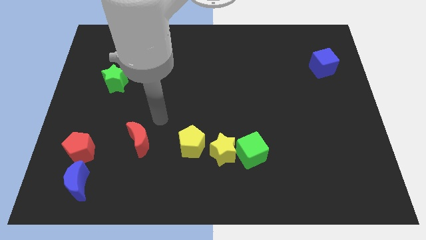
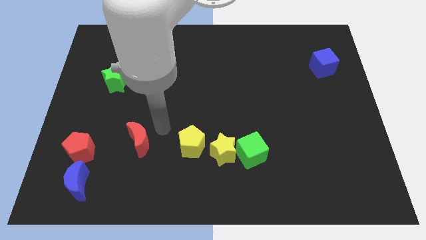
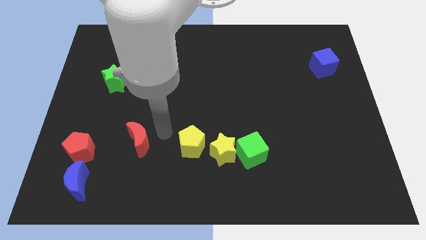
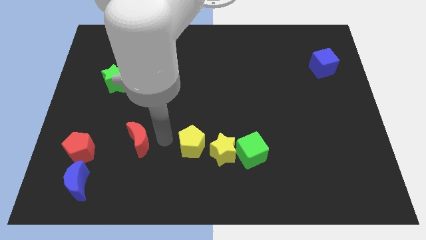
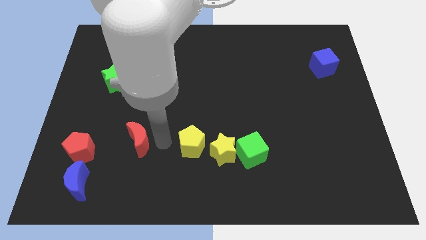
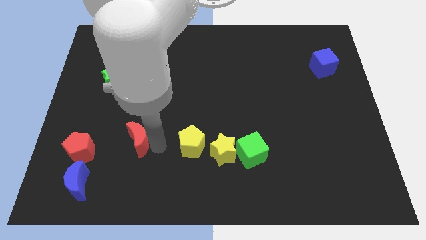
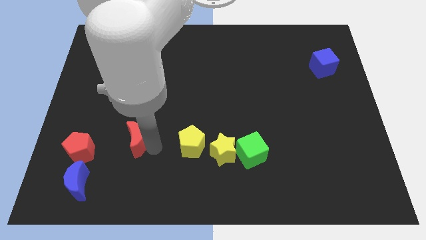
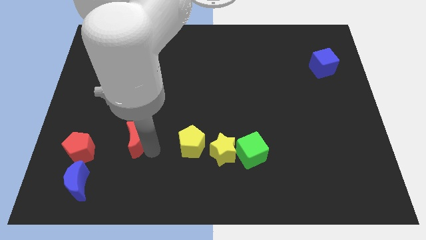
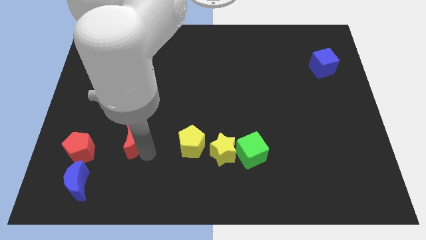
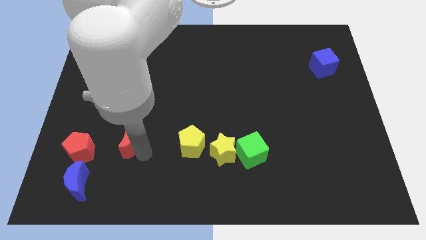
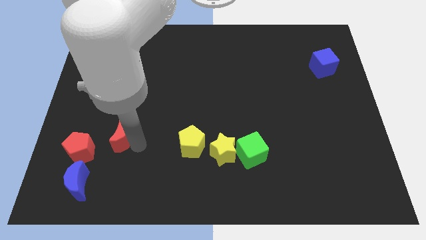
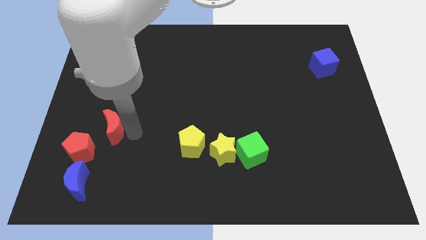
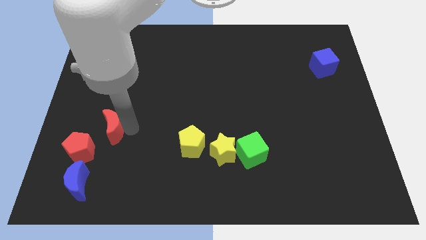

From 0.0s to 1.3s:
touch red crescent on right side

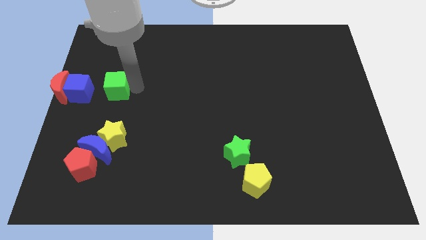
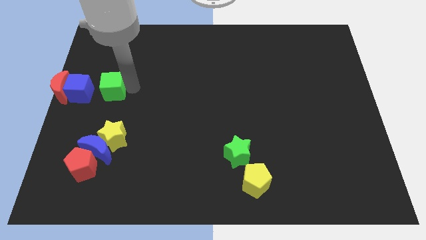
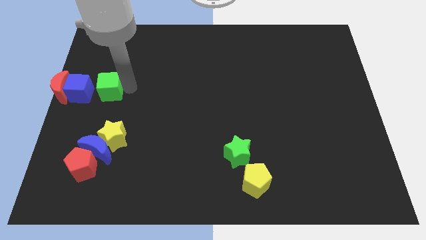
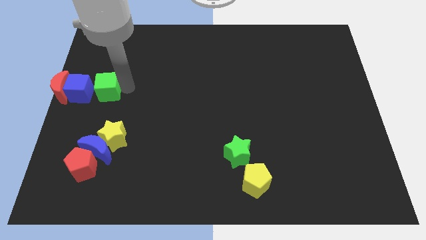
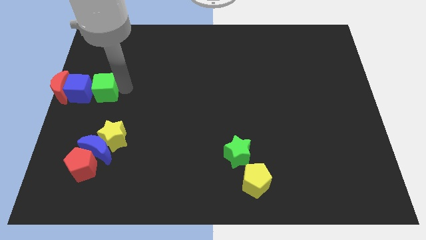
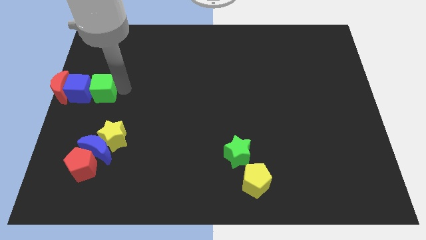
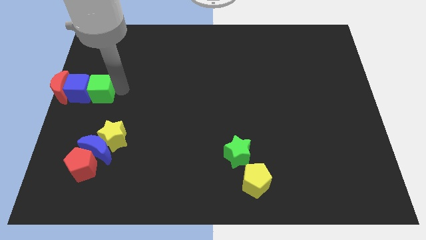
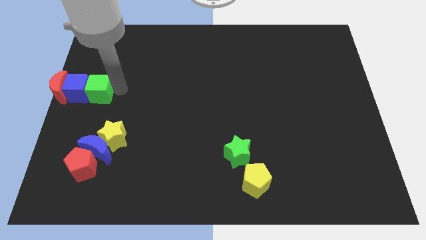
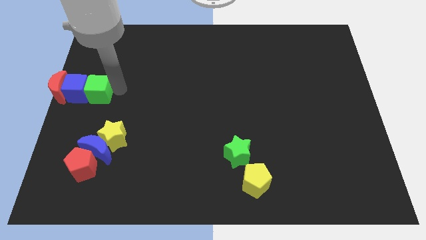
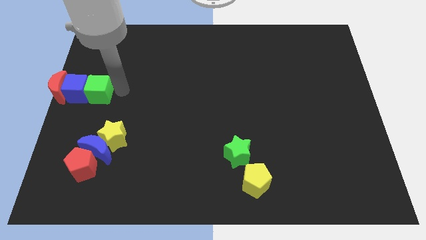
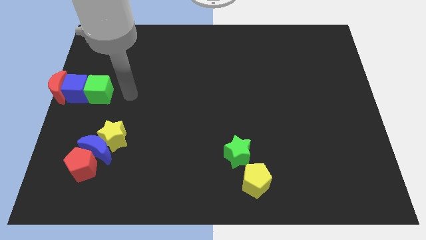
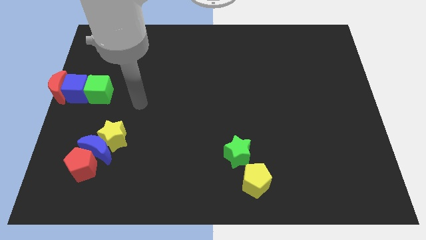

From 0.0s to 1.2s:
place green cube near blue cube

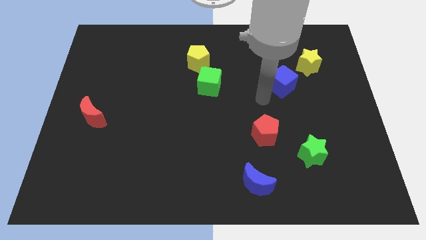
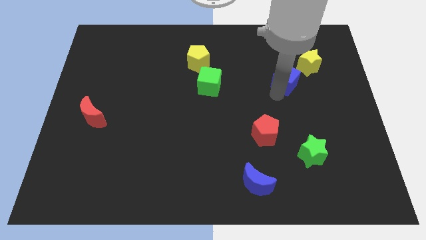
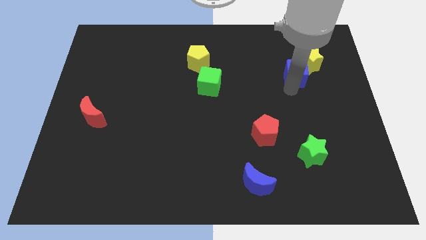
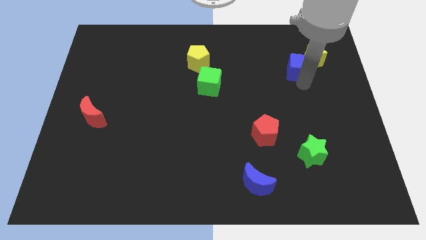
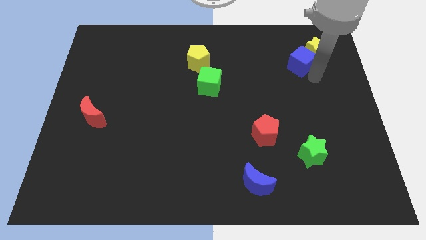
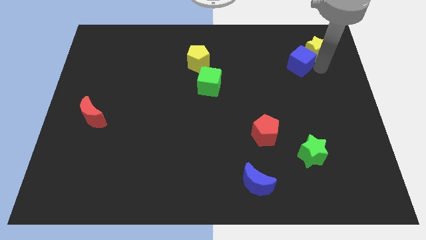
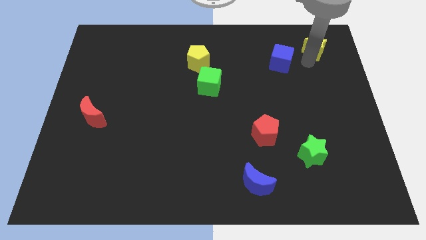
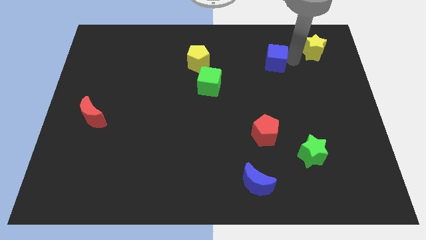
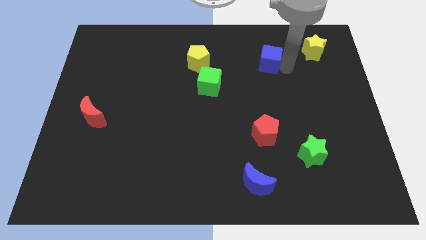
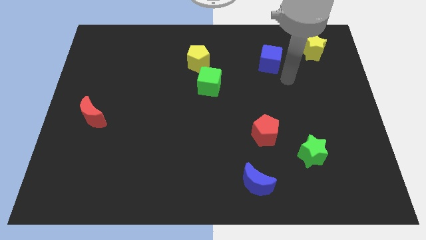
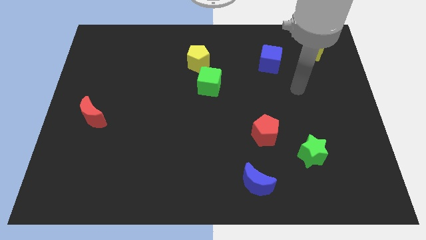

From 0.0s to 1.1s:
push the blue cube to the vertical top side of the red pentagon

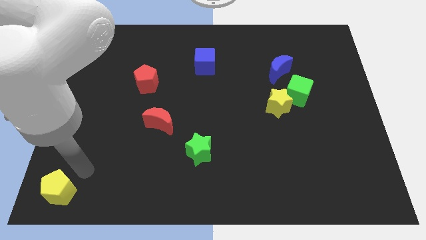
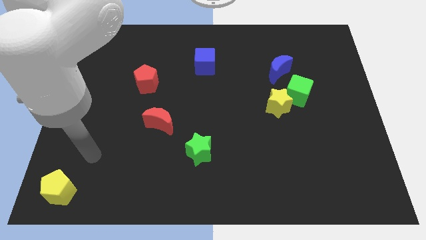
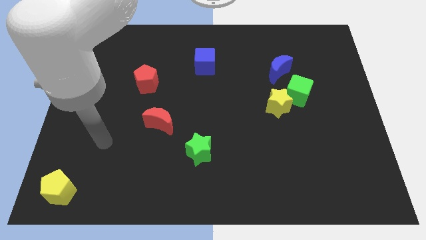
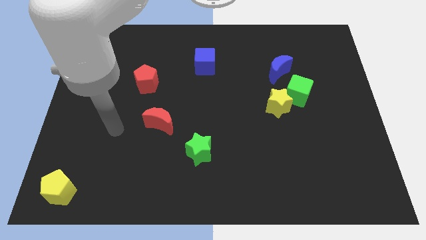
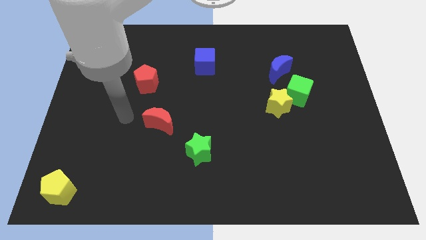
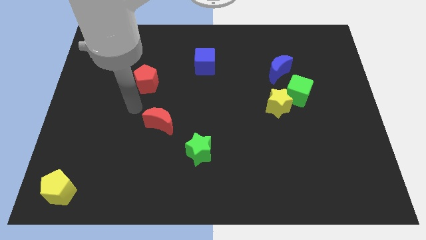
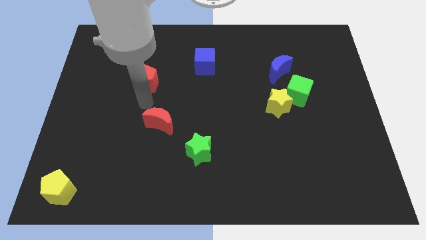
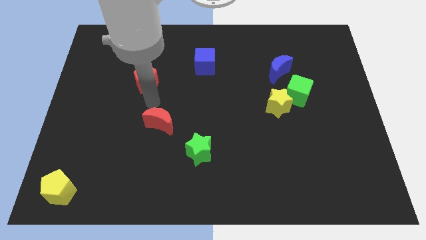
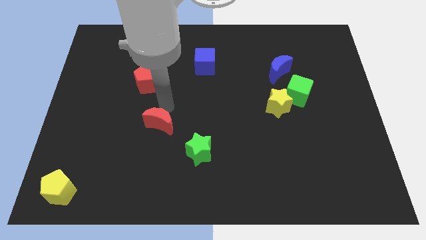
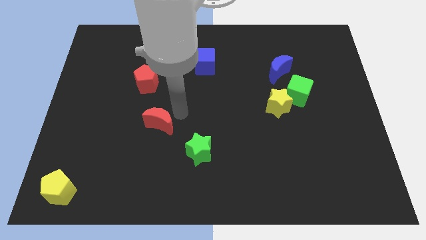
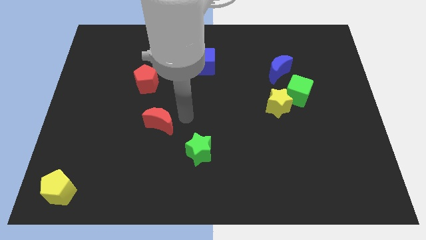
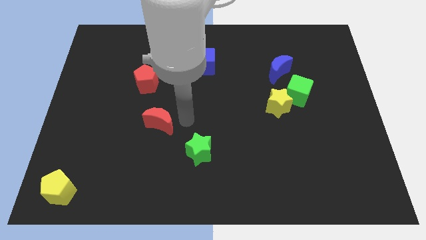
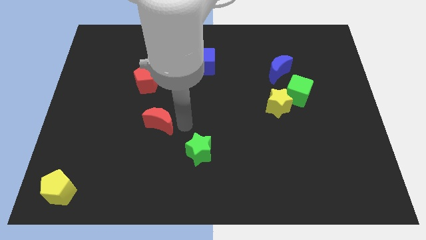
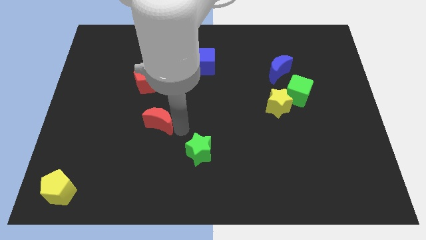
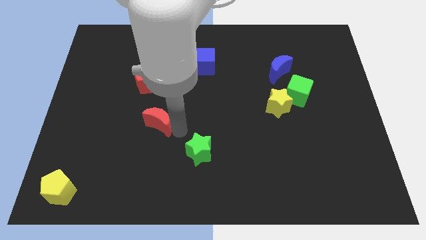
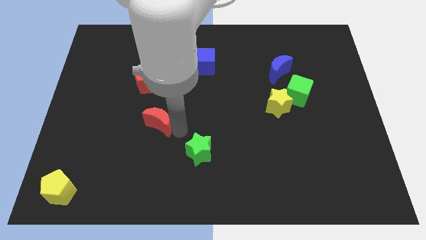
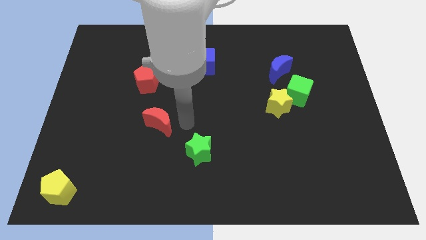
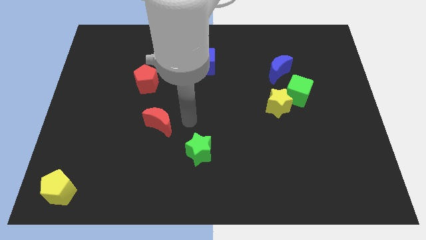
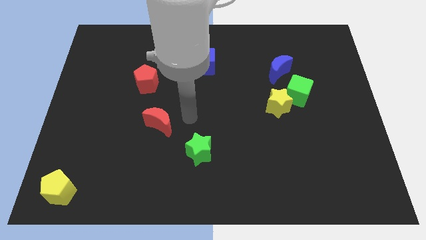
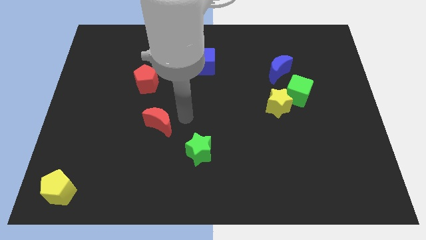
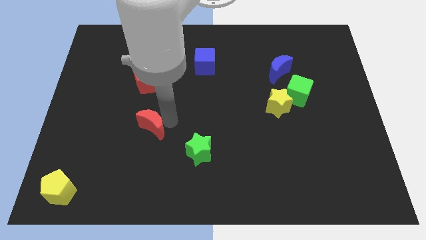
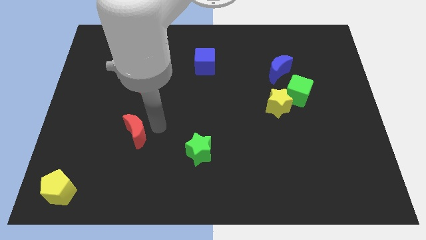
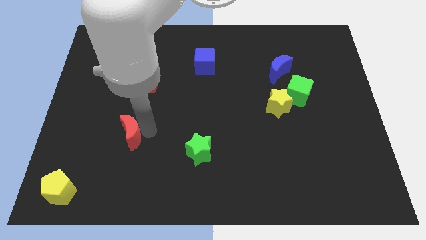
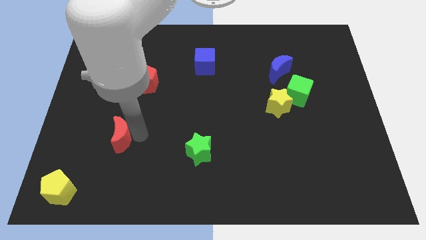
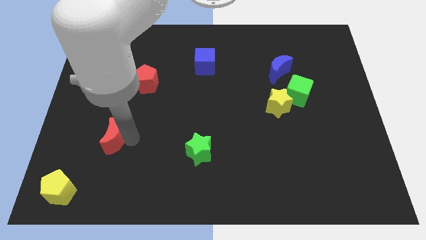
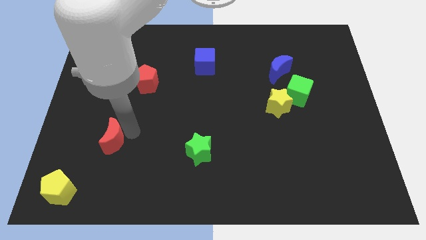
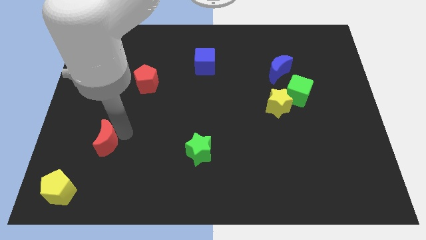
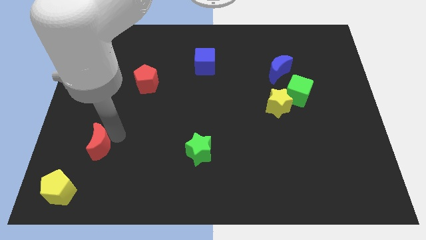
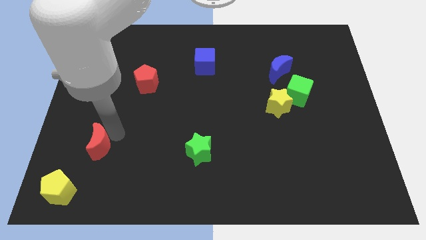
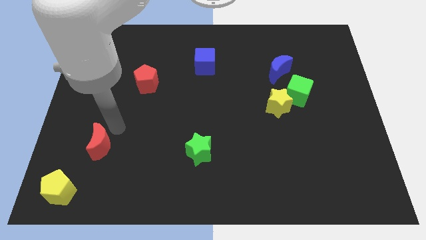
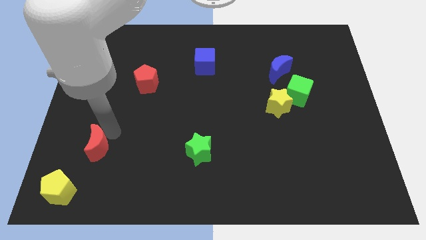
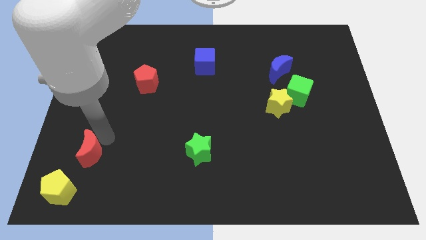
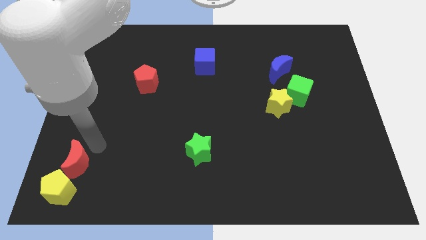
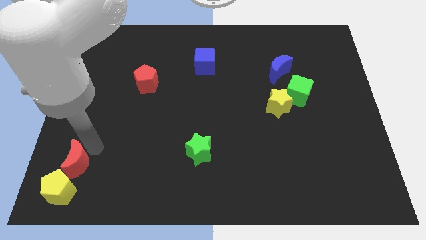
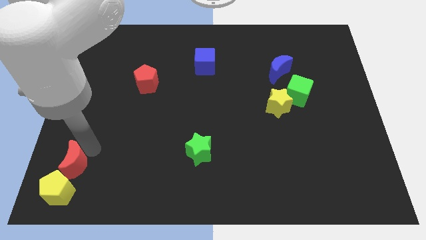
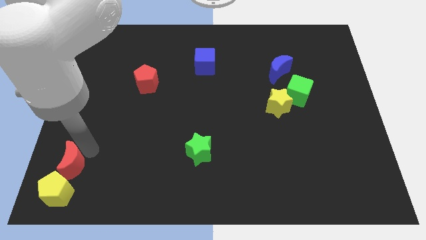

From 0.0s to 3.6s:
push the red crescent into yellow pentagon

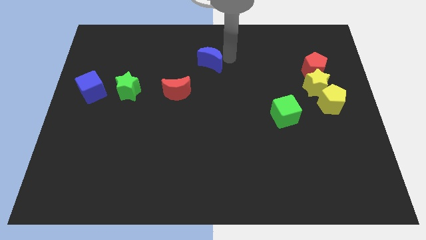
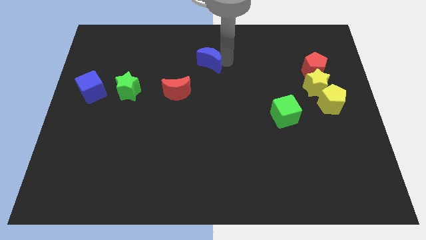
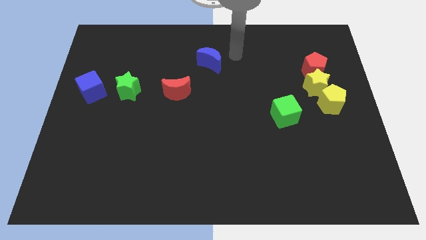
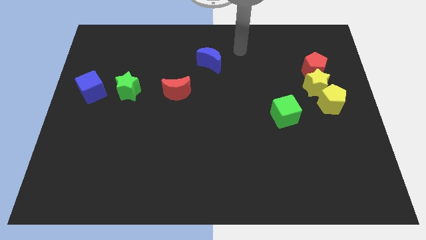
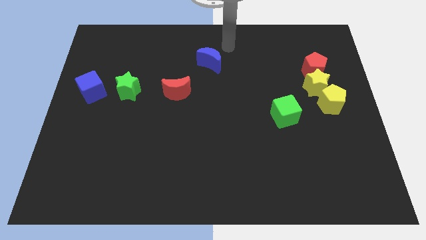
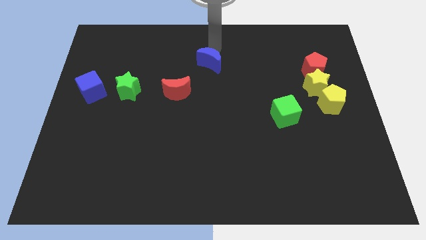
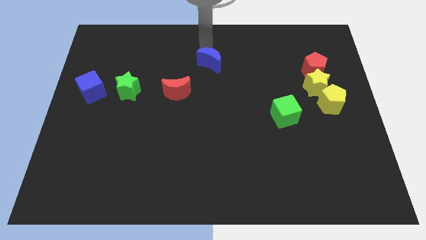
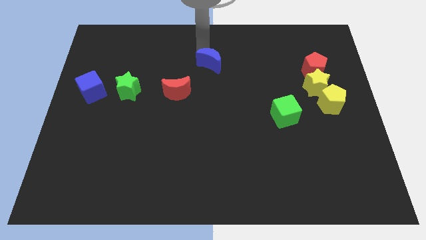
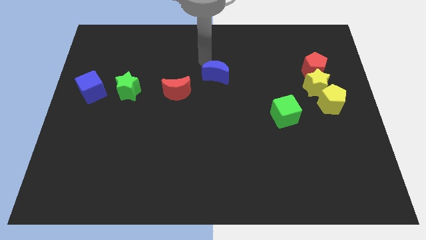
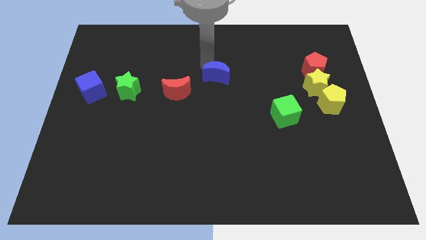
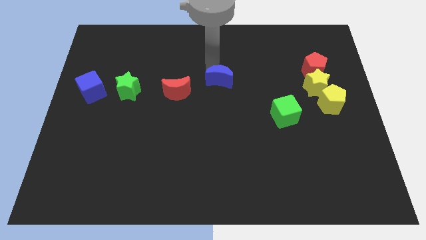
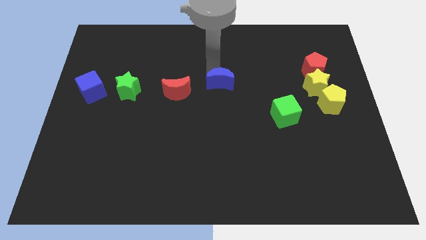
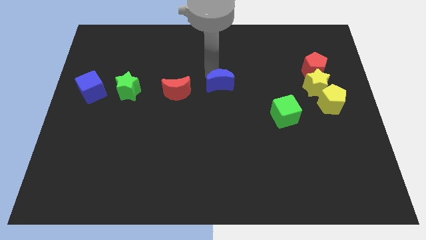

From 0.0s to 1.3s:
move the blue crescent to the right of red crescent

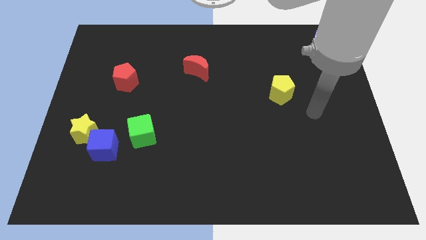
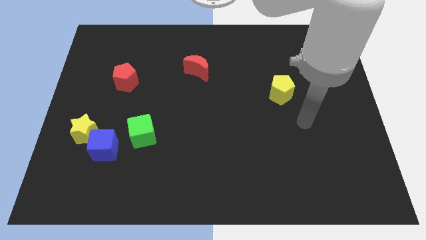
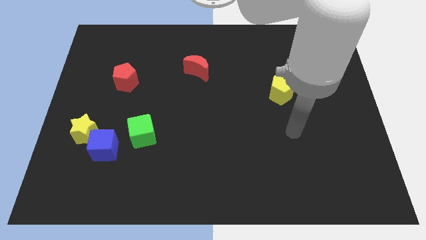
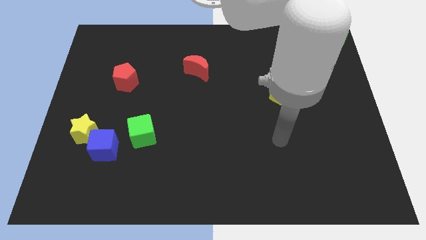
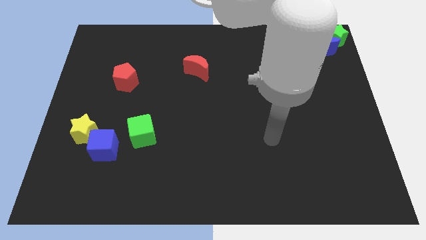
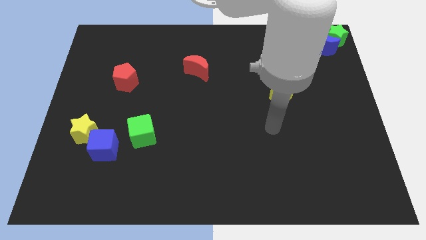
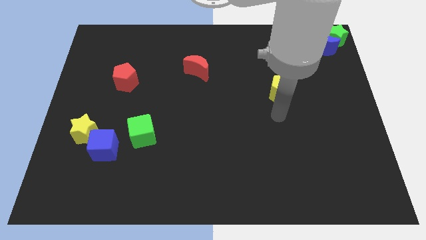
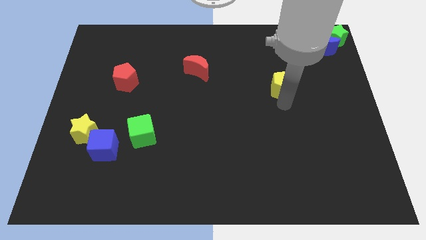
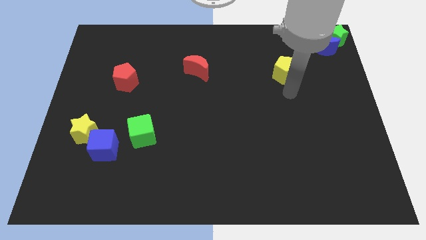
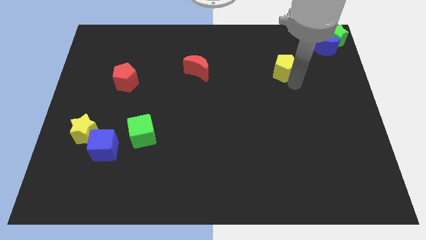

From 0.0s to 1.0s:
place the yellow pentagon right to the red moon
